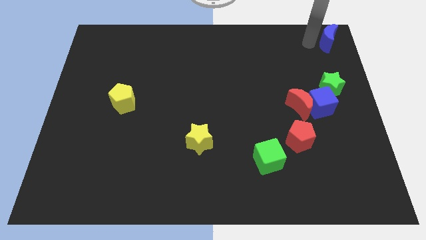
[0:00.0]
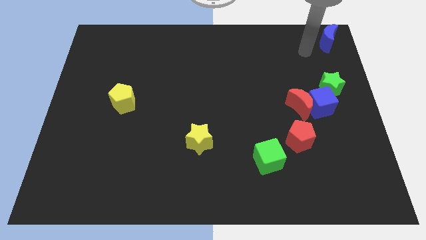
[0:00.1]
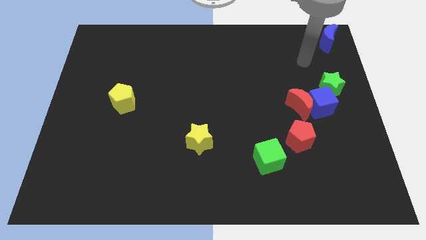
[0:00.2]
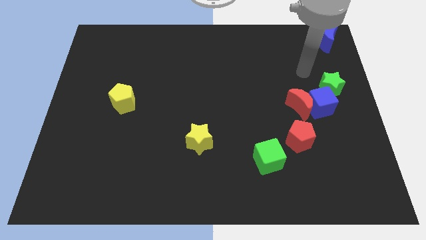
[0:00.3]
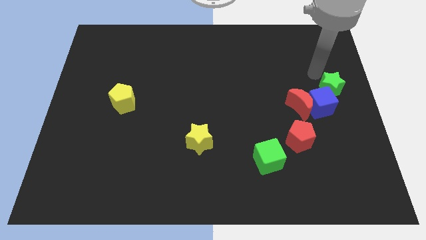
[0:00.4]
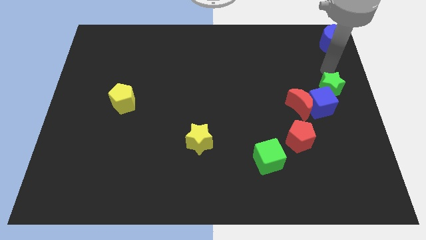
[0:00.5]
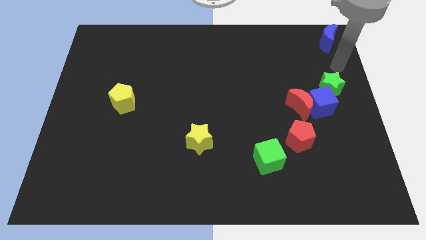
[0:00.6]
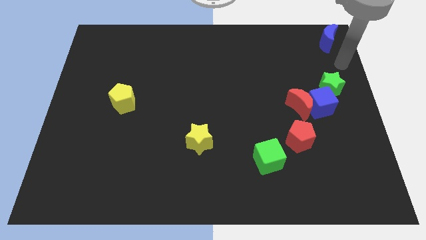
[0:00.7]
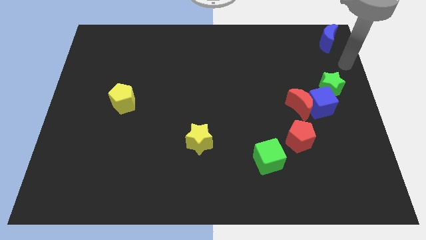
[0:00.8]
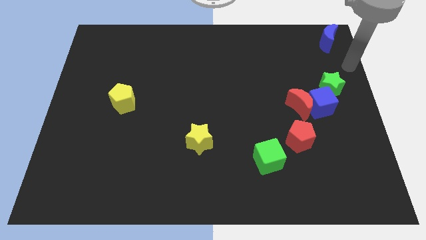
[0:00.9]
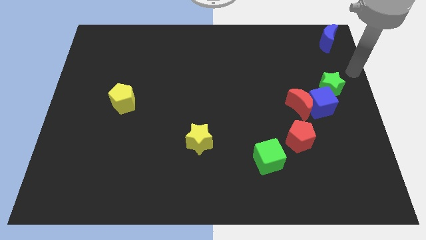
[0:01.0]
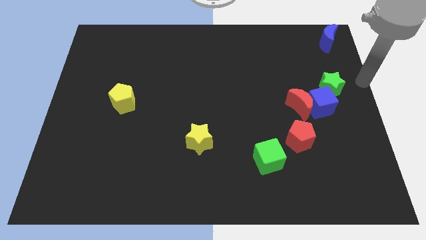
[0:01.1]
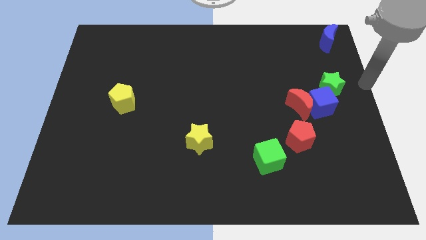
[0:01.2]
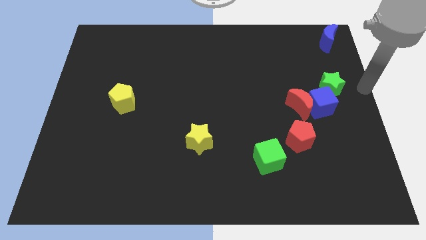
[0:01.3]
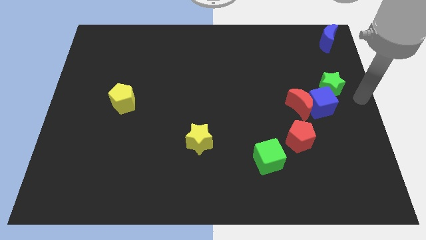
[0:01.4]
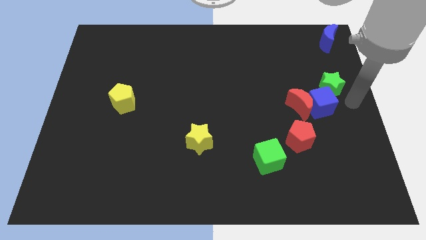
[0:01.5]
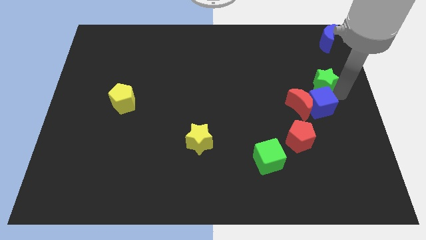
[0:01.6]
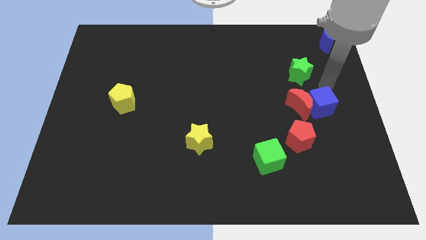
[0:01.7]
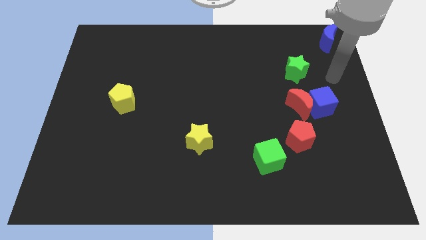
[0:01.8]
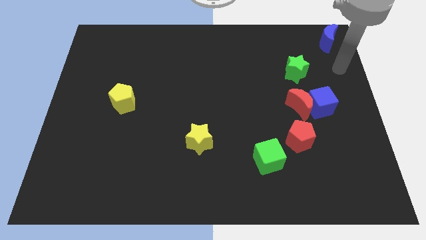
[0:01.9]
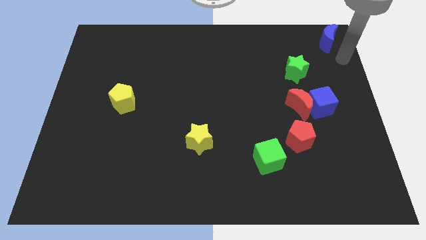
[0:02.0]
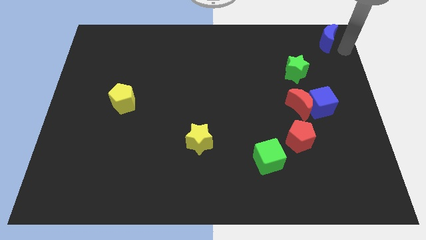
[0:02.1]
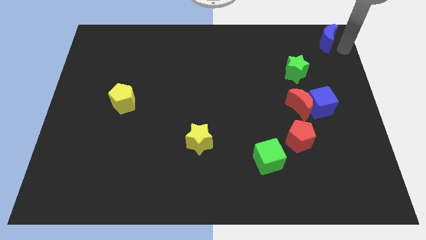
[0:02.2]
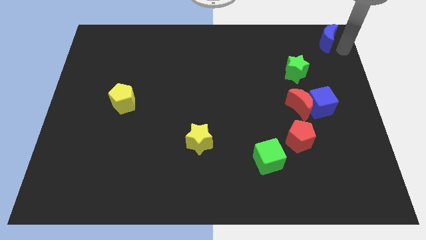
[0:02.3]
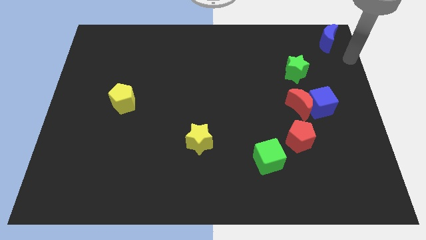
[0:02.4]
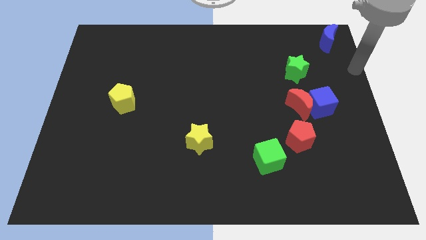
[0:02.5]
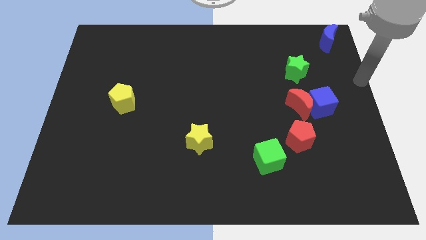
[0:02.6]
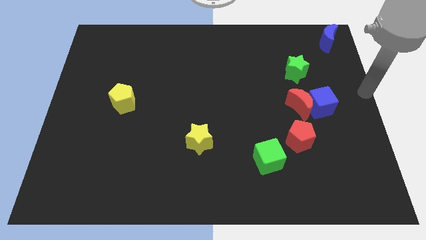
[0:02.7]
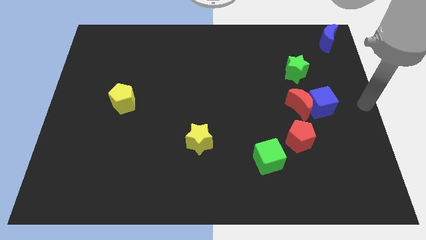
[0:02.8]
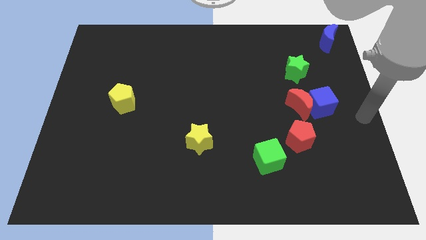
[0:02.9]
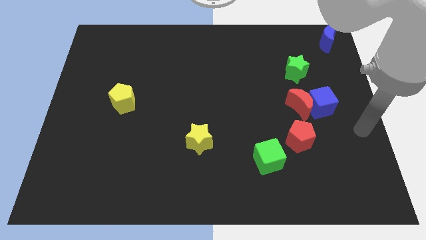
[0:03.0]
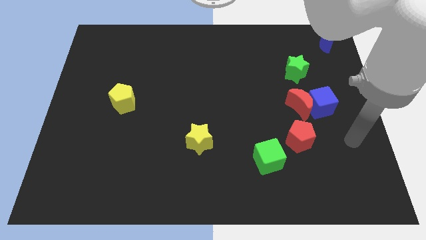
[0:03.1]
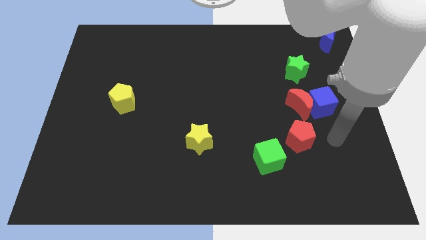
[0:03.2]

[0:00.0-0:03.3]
separate the green star from the blue cube

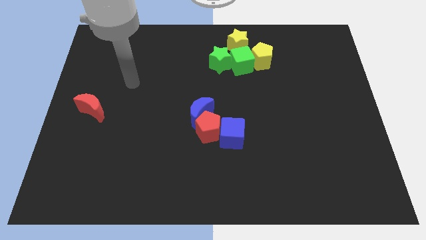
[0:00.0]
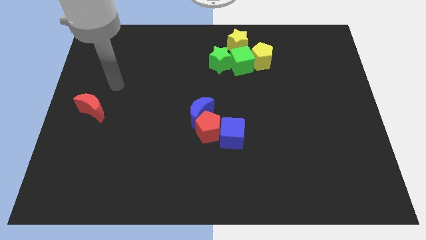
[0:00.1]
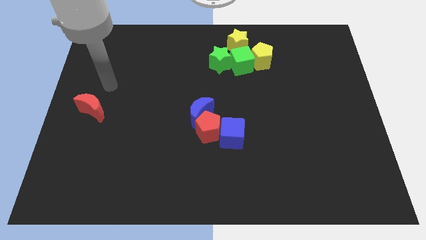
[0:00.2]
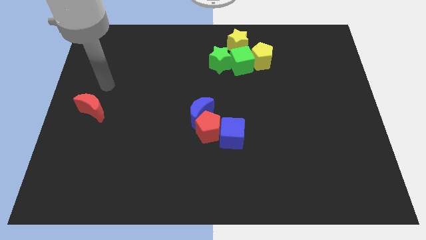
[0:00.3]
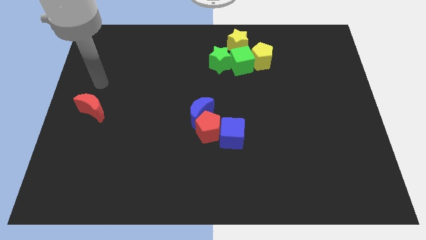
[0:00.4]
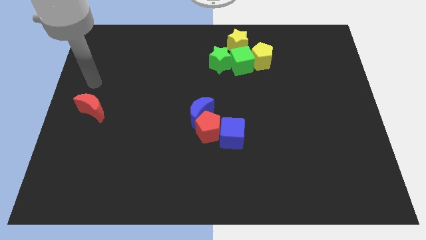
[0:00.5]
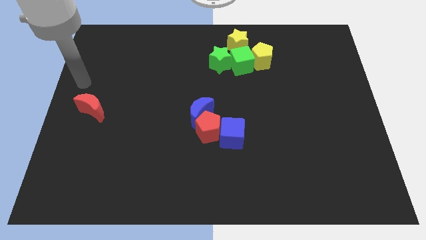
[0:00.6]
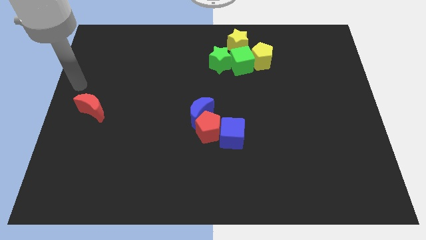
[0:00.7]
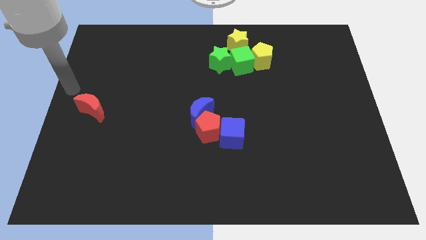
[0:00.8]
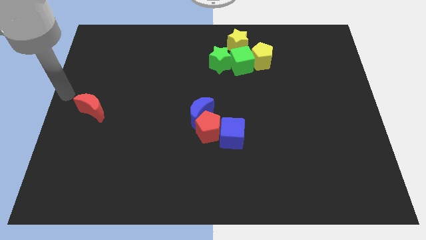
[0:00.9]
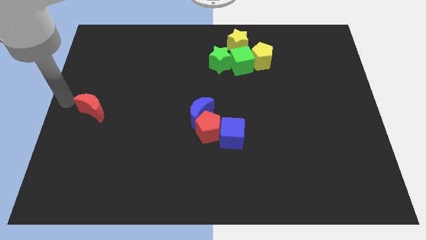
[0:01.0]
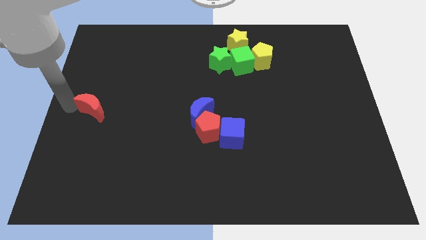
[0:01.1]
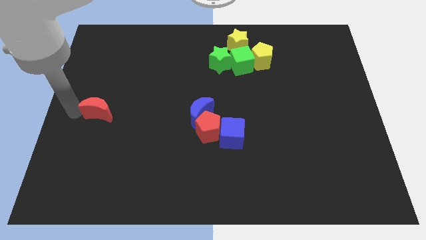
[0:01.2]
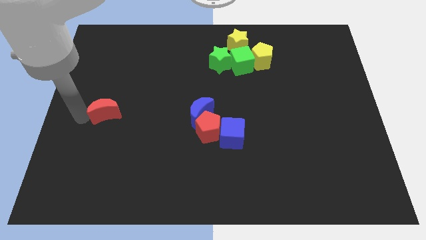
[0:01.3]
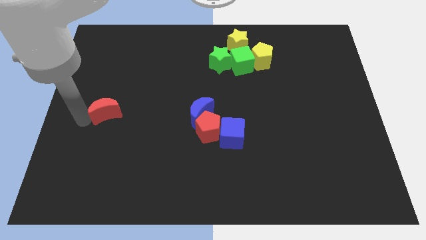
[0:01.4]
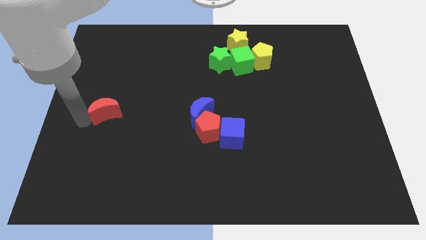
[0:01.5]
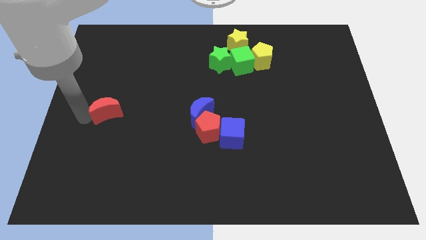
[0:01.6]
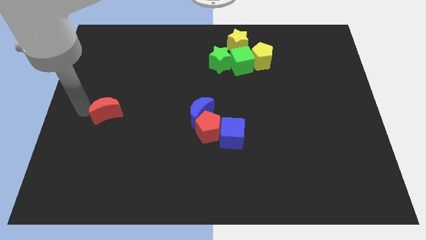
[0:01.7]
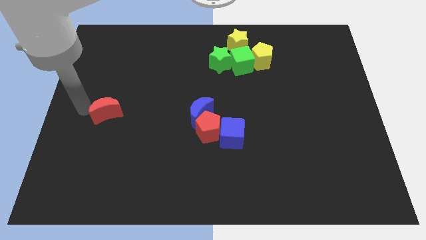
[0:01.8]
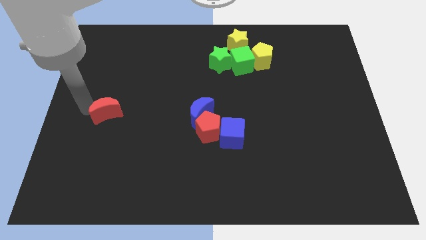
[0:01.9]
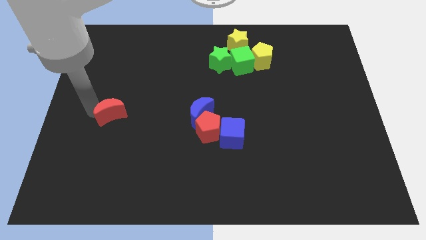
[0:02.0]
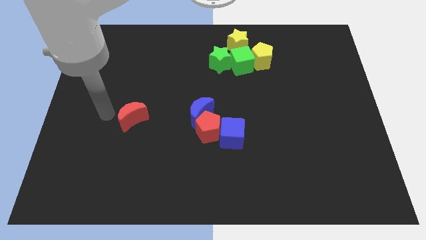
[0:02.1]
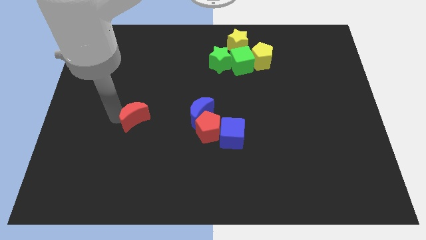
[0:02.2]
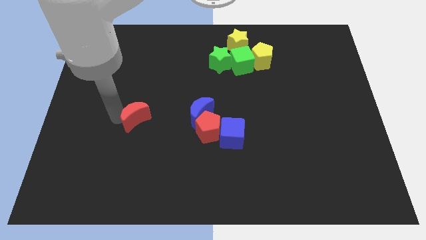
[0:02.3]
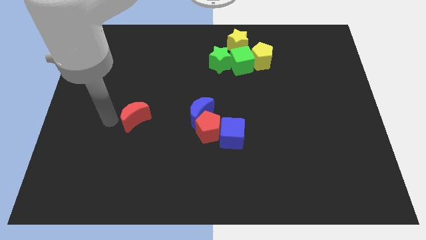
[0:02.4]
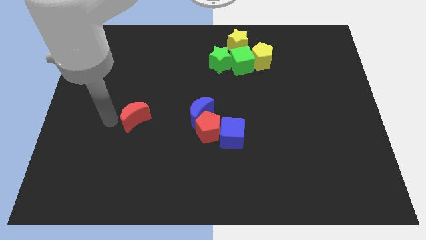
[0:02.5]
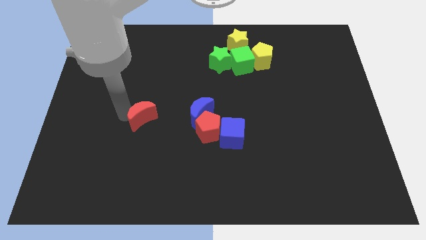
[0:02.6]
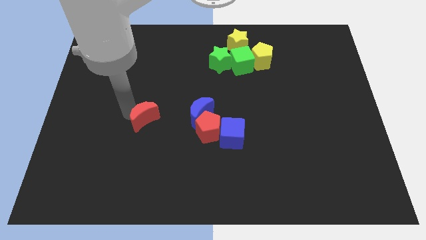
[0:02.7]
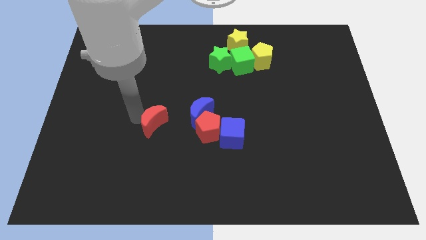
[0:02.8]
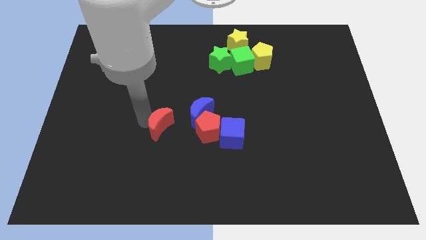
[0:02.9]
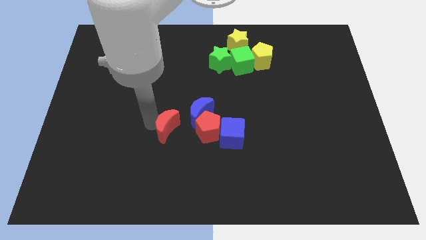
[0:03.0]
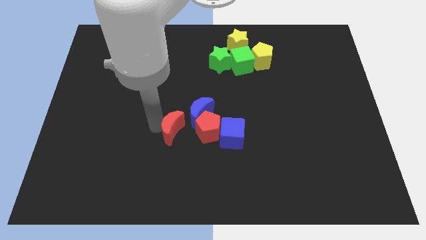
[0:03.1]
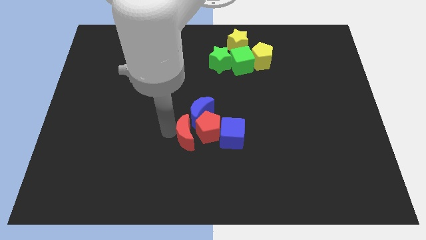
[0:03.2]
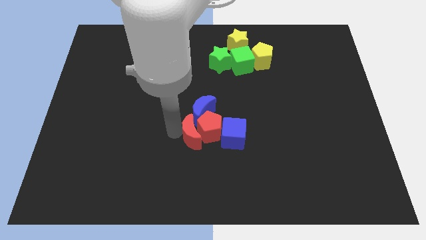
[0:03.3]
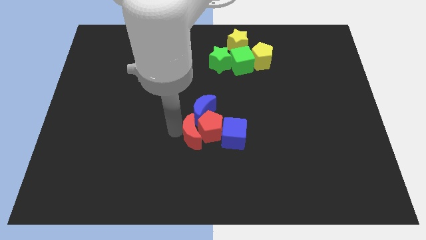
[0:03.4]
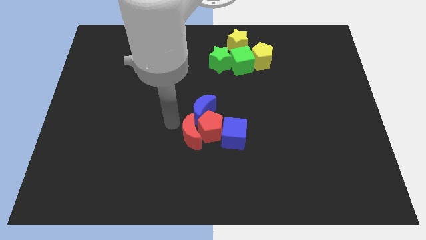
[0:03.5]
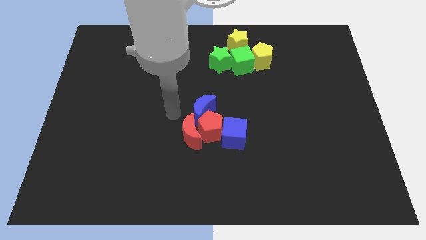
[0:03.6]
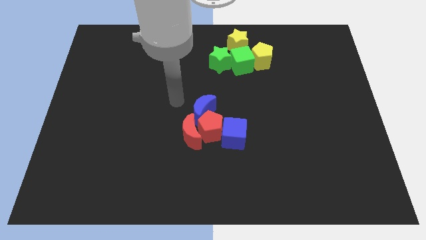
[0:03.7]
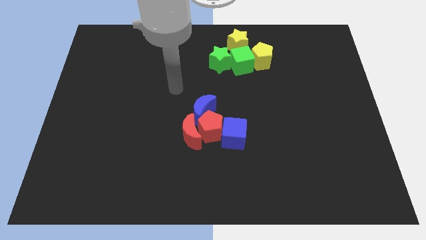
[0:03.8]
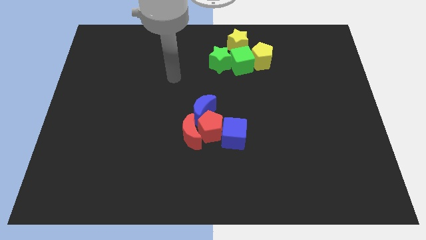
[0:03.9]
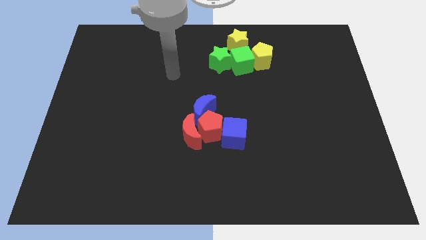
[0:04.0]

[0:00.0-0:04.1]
put the red moon into the red pentagon

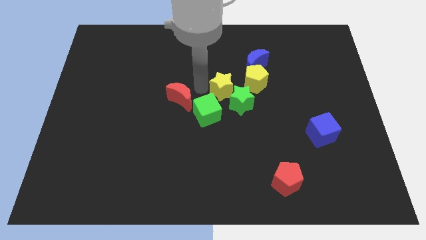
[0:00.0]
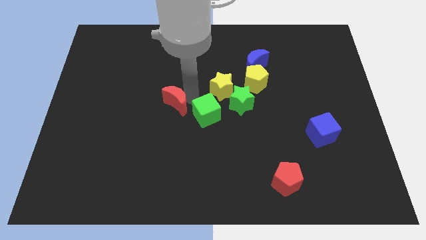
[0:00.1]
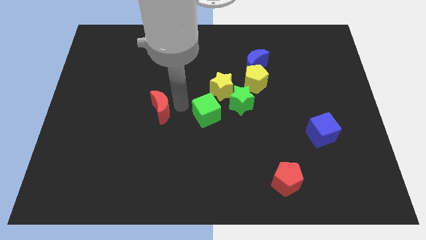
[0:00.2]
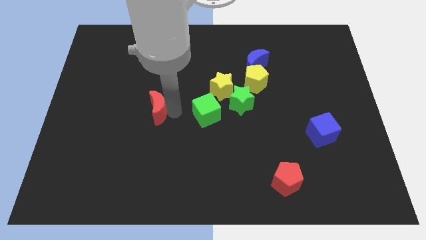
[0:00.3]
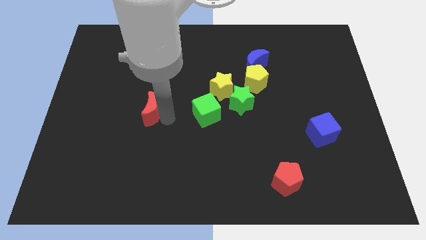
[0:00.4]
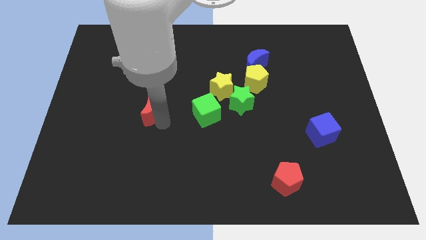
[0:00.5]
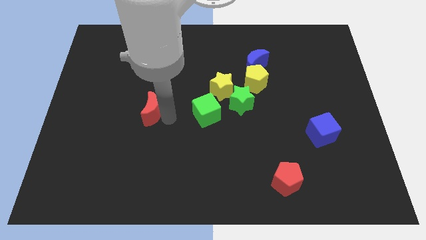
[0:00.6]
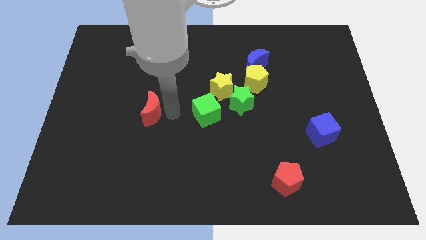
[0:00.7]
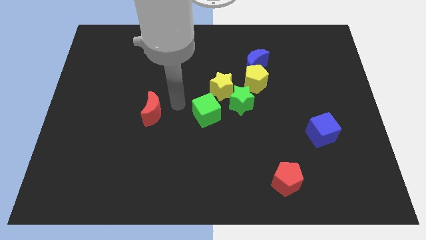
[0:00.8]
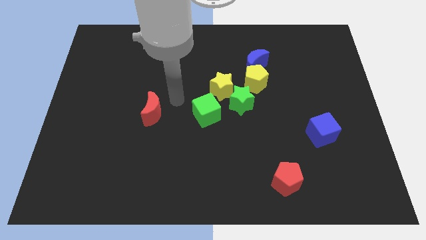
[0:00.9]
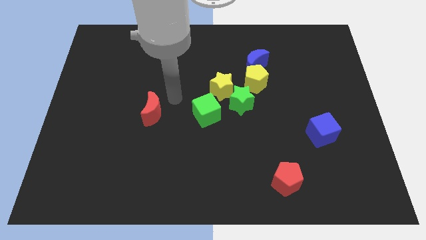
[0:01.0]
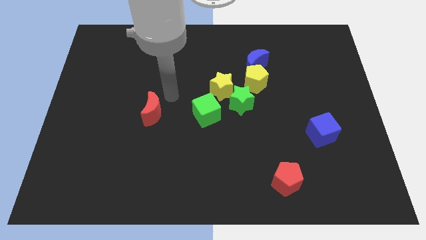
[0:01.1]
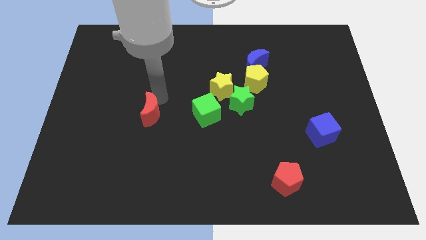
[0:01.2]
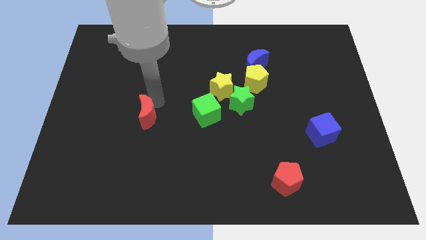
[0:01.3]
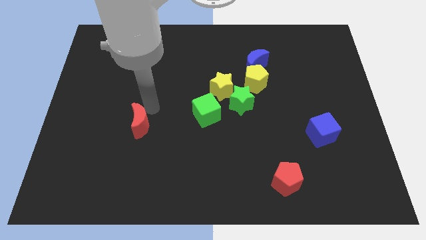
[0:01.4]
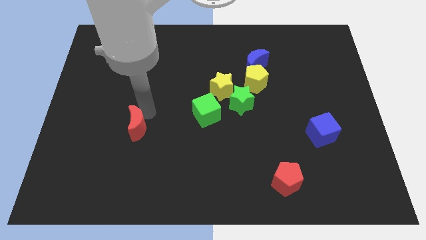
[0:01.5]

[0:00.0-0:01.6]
place the red crescent to the left side of green cube
